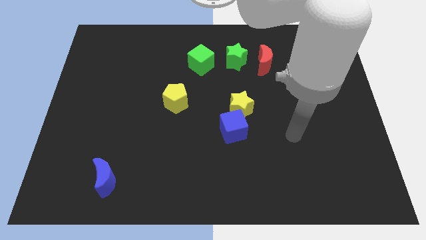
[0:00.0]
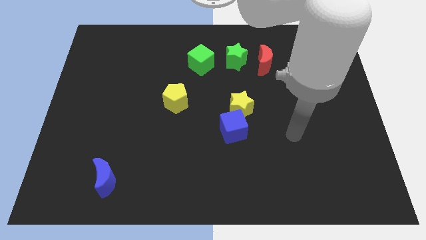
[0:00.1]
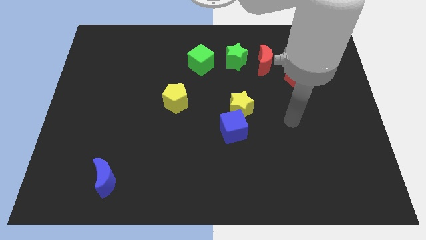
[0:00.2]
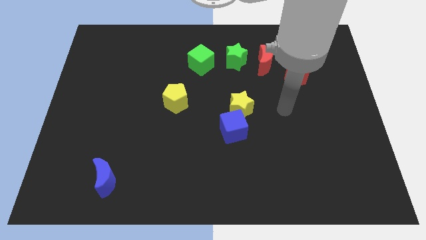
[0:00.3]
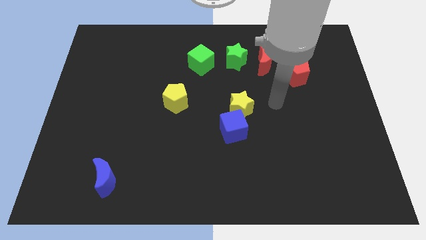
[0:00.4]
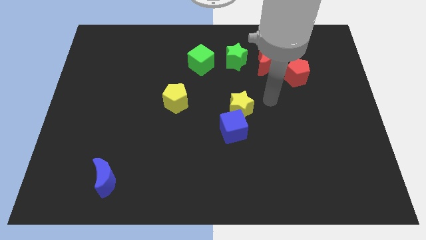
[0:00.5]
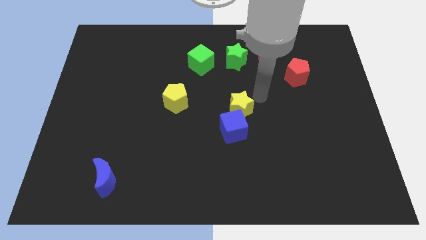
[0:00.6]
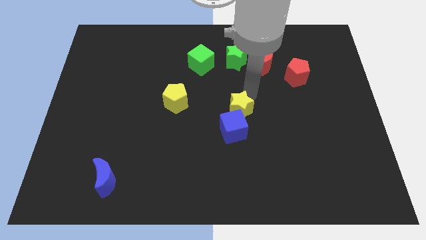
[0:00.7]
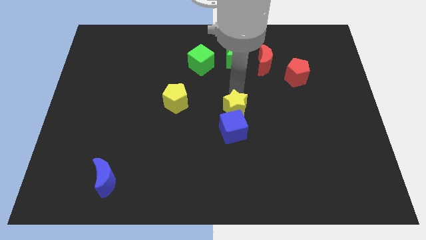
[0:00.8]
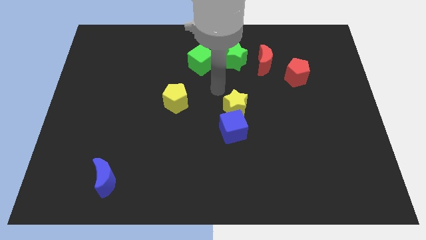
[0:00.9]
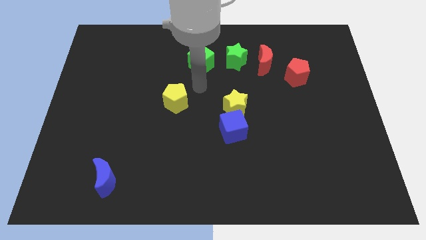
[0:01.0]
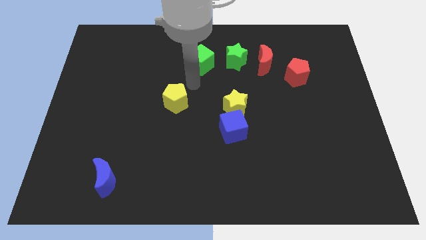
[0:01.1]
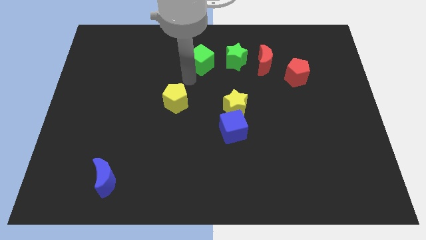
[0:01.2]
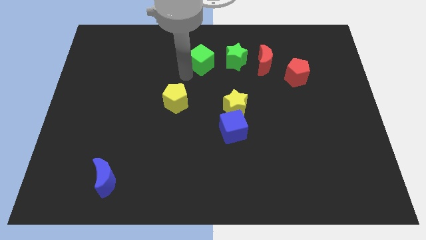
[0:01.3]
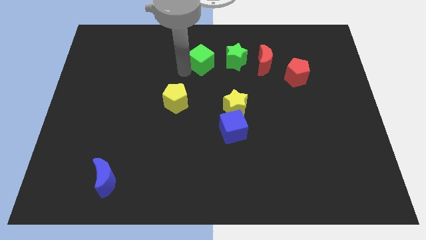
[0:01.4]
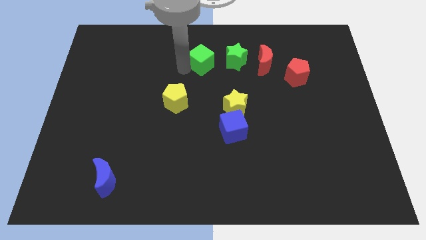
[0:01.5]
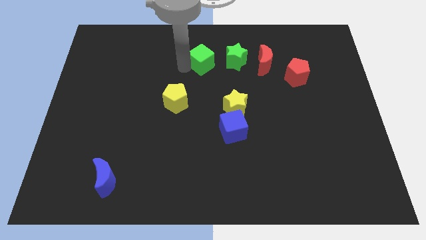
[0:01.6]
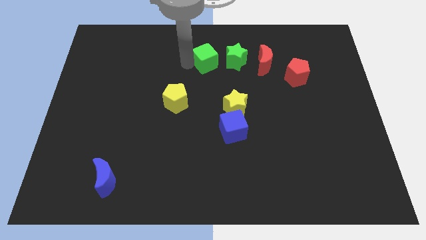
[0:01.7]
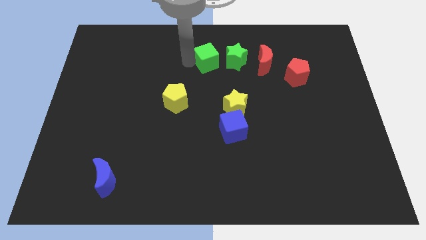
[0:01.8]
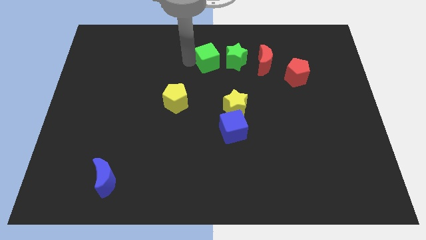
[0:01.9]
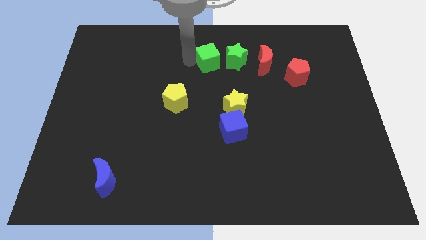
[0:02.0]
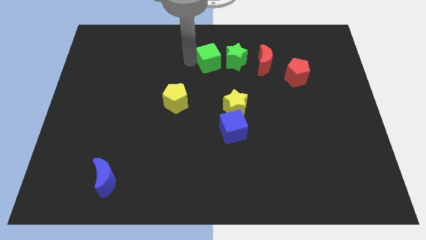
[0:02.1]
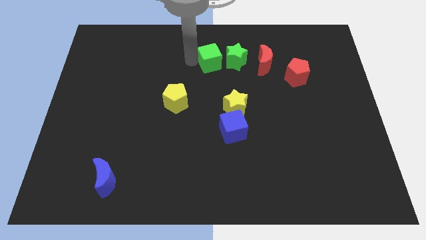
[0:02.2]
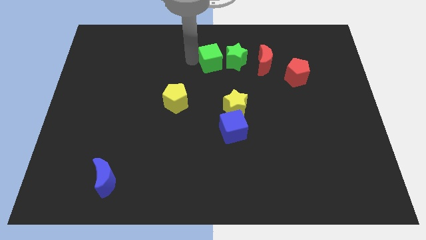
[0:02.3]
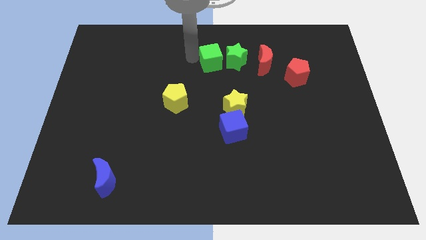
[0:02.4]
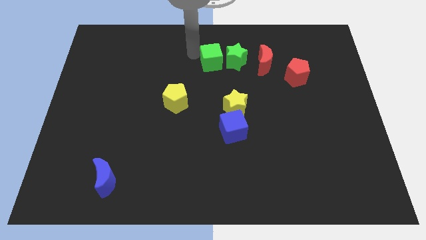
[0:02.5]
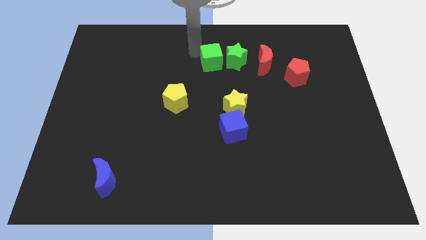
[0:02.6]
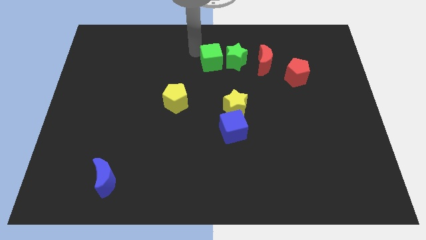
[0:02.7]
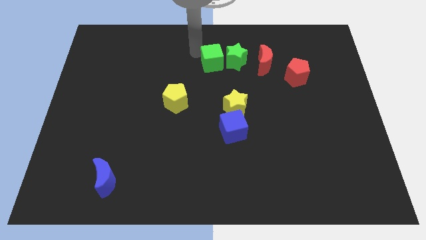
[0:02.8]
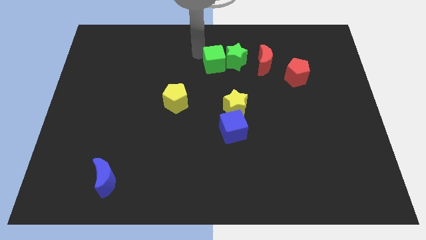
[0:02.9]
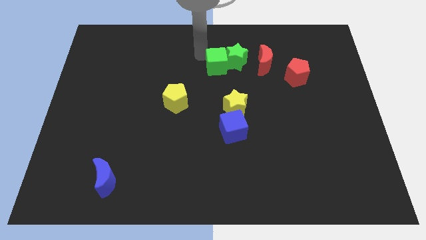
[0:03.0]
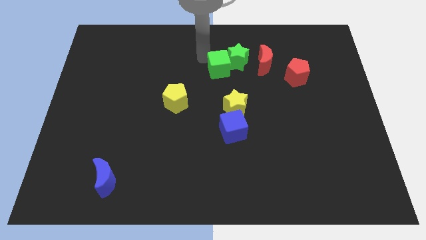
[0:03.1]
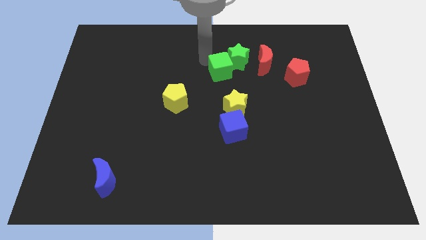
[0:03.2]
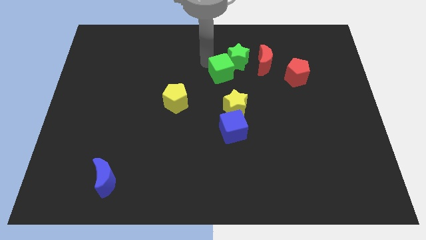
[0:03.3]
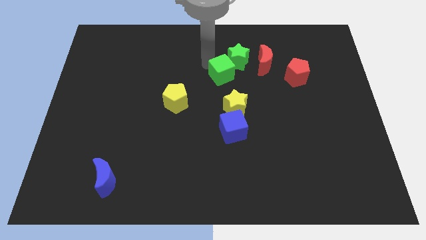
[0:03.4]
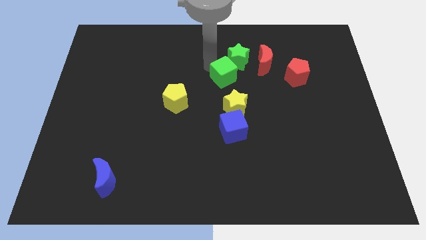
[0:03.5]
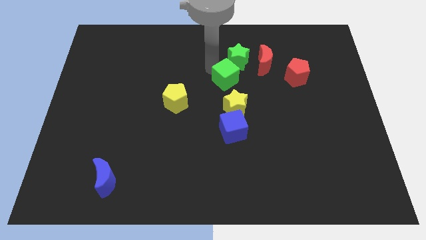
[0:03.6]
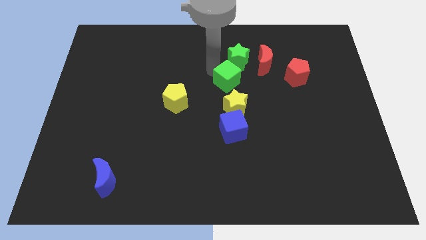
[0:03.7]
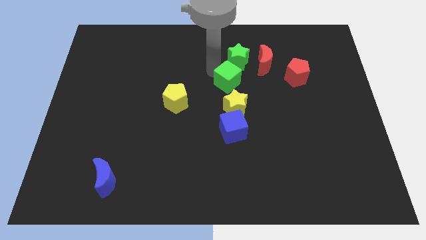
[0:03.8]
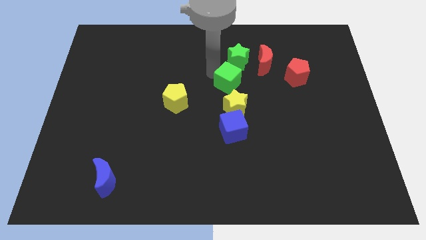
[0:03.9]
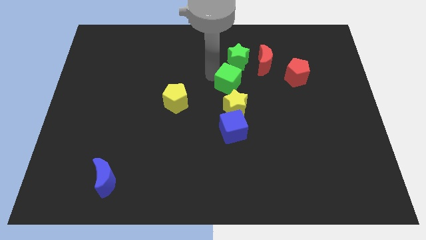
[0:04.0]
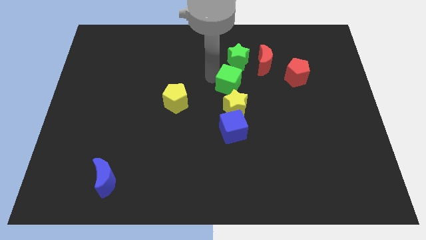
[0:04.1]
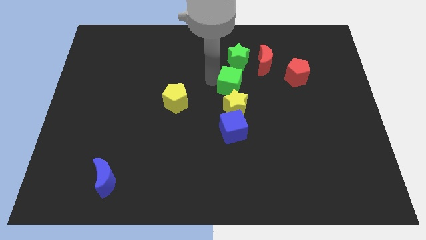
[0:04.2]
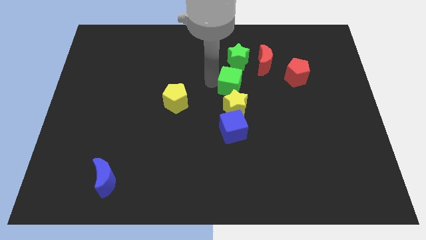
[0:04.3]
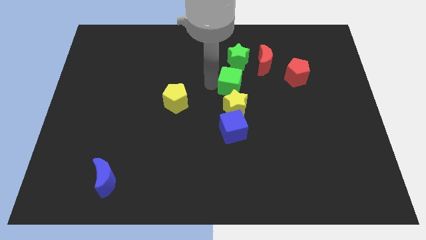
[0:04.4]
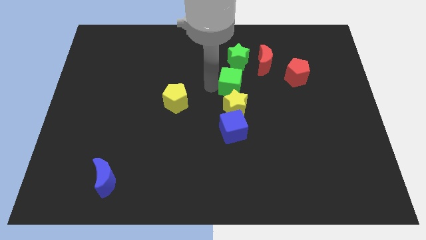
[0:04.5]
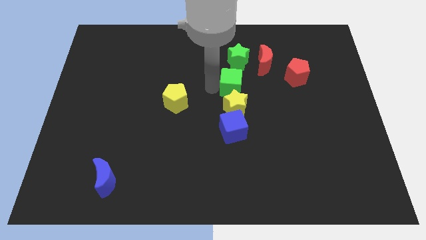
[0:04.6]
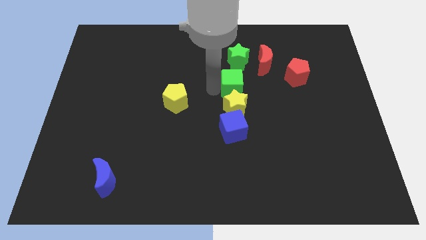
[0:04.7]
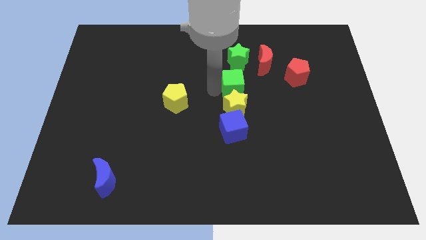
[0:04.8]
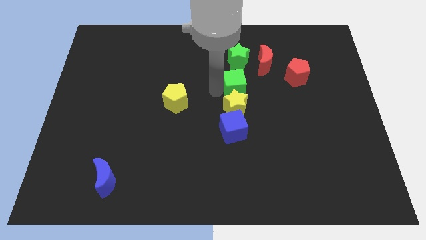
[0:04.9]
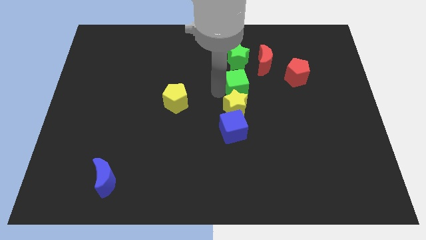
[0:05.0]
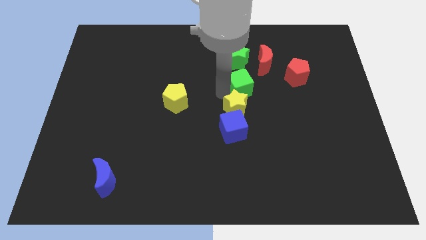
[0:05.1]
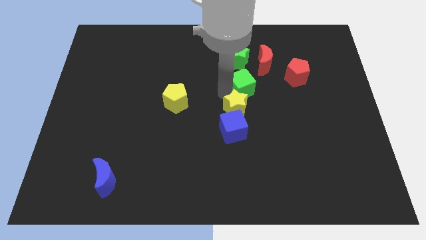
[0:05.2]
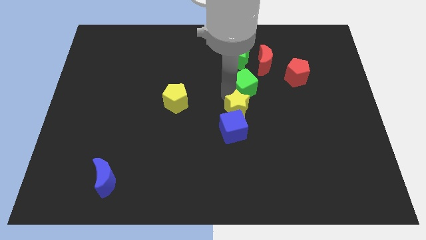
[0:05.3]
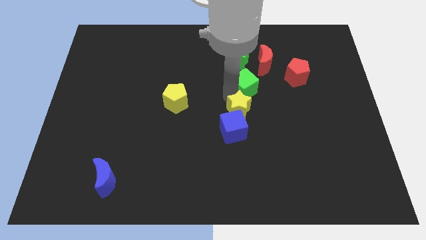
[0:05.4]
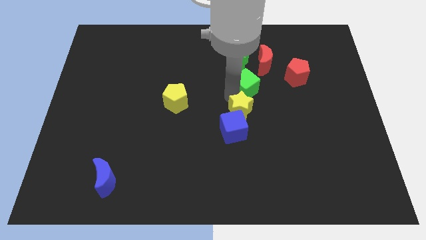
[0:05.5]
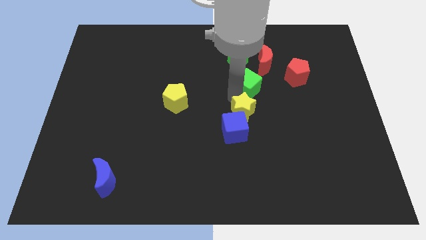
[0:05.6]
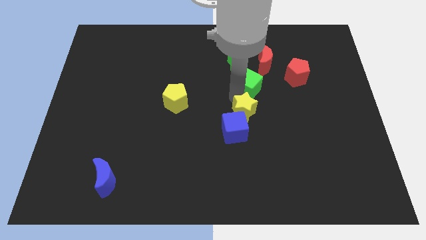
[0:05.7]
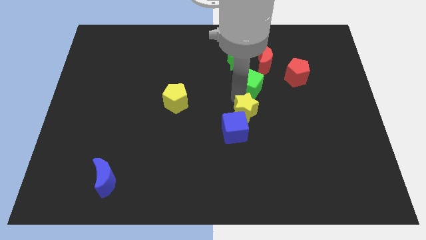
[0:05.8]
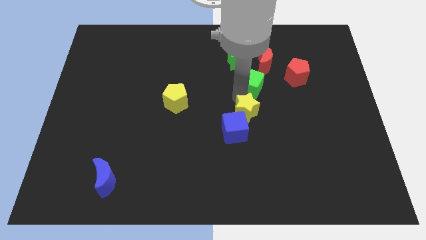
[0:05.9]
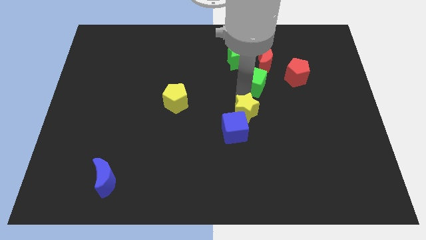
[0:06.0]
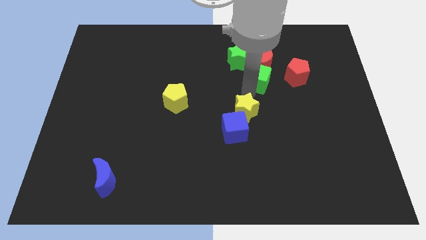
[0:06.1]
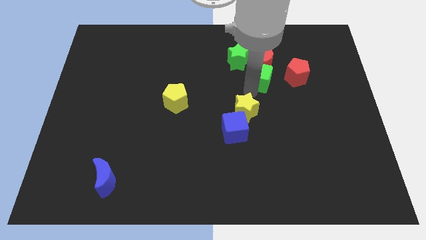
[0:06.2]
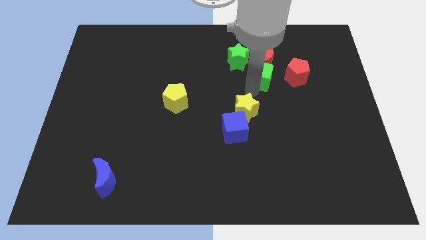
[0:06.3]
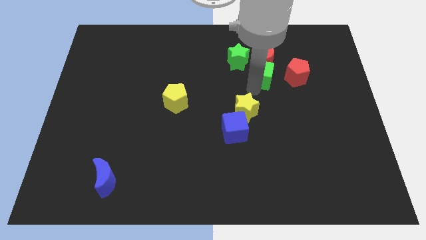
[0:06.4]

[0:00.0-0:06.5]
push the green cube next to the red moon

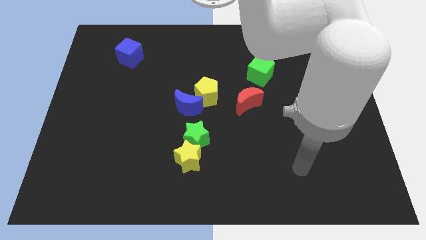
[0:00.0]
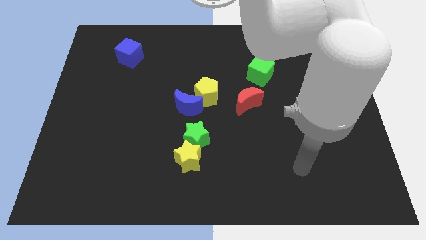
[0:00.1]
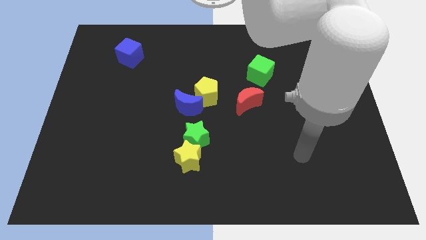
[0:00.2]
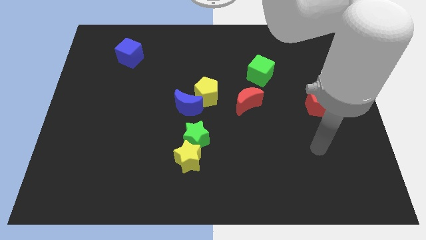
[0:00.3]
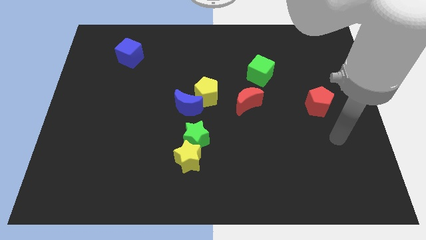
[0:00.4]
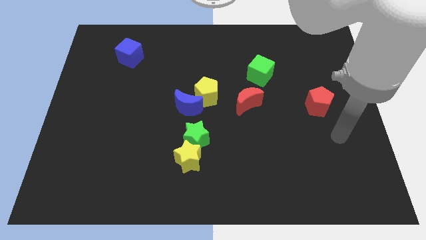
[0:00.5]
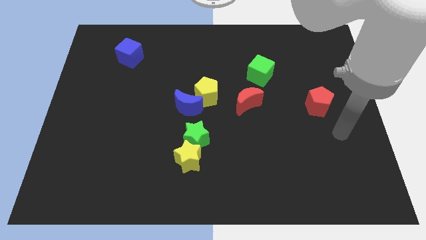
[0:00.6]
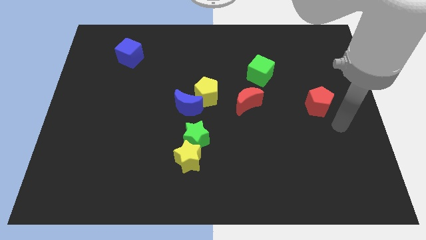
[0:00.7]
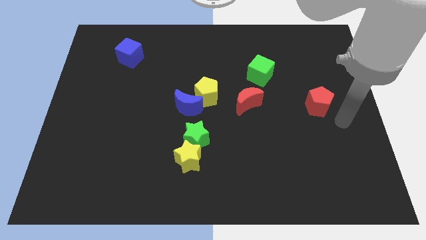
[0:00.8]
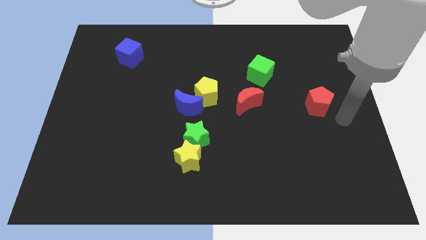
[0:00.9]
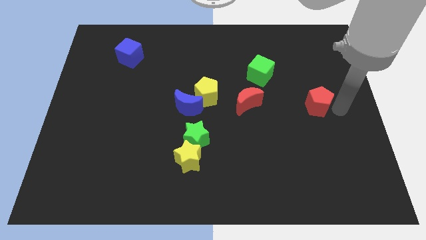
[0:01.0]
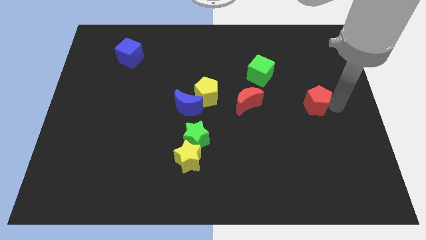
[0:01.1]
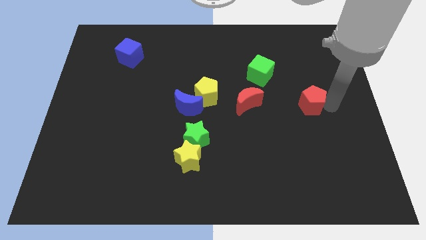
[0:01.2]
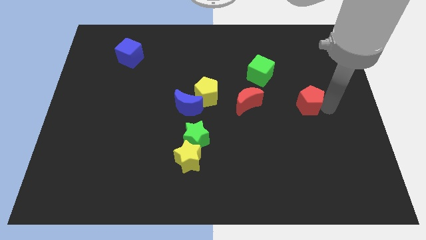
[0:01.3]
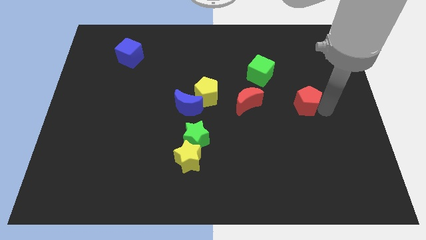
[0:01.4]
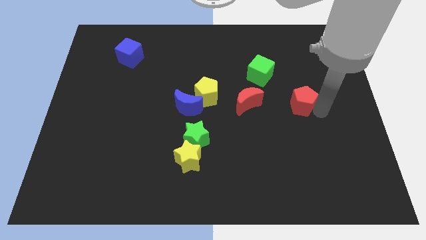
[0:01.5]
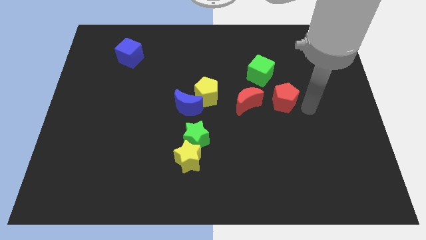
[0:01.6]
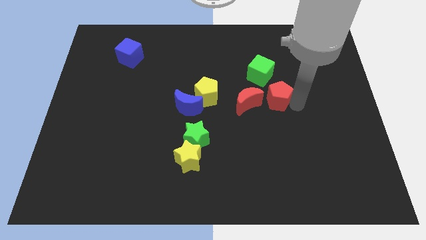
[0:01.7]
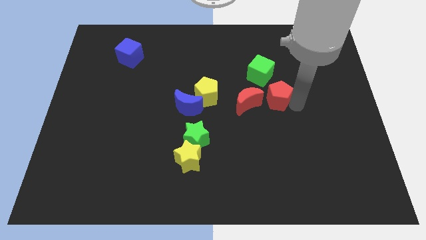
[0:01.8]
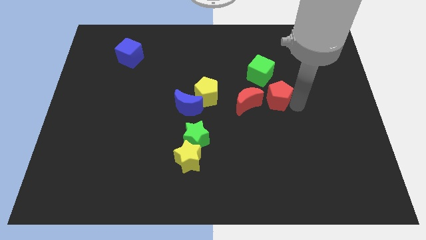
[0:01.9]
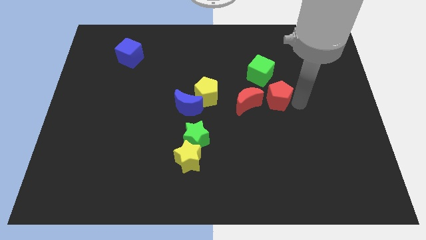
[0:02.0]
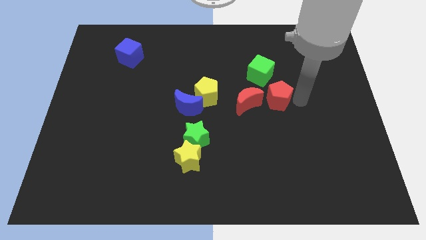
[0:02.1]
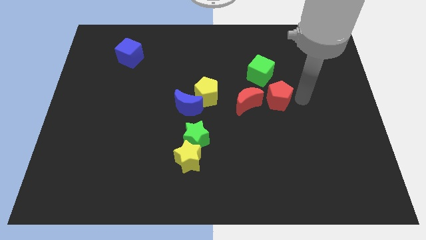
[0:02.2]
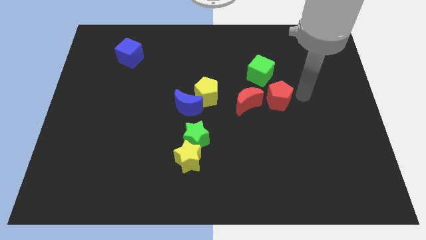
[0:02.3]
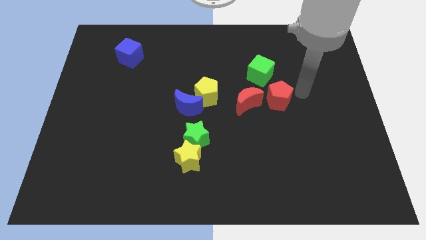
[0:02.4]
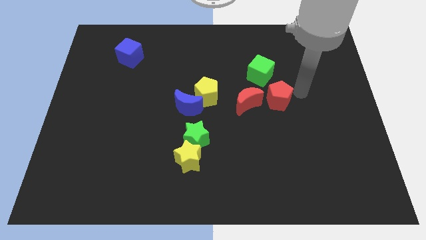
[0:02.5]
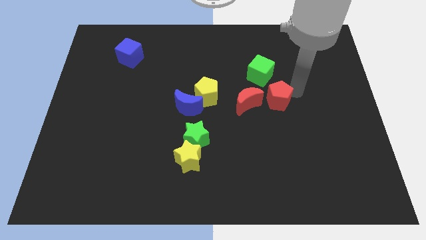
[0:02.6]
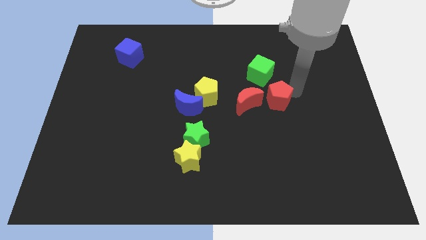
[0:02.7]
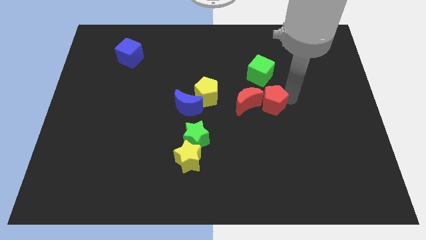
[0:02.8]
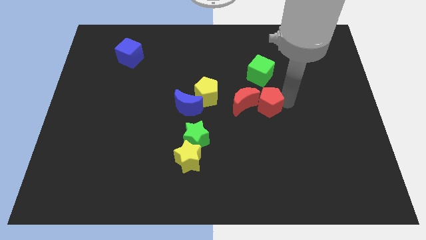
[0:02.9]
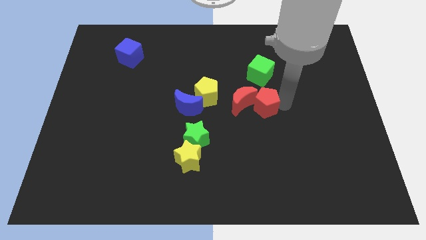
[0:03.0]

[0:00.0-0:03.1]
push the red pentagon next to the red moon
